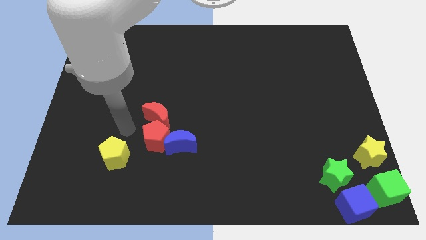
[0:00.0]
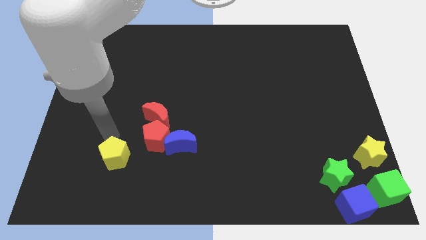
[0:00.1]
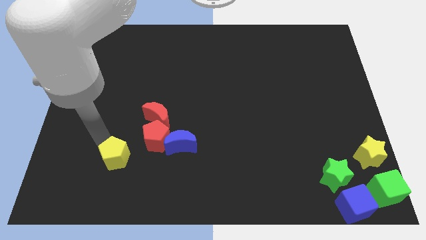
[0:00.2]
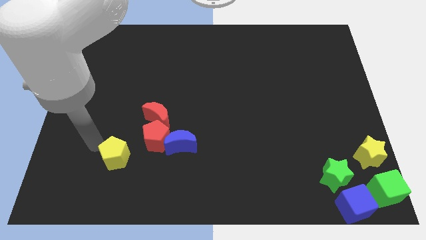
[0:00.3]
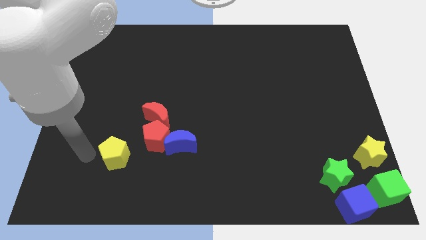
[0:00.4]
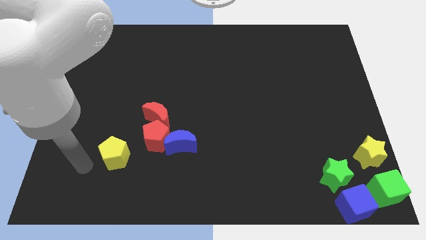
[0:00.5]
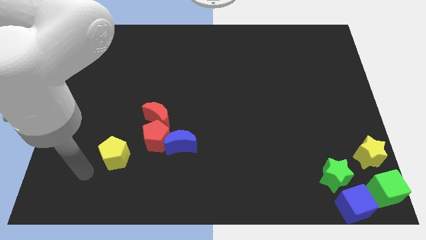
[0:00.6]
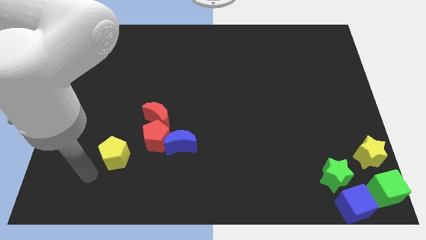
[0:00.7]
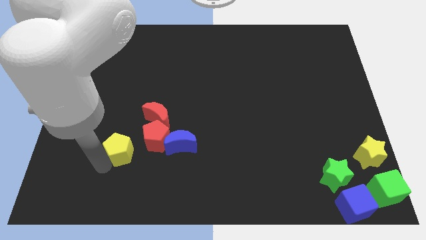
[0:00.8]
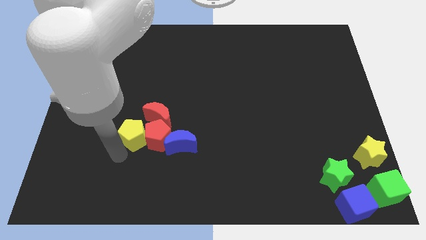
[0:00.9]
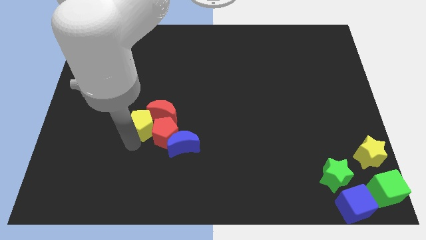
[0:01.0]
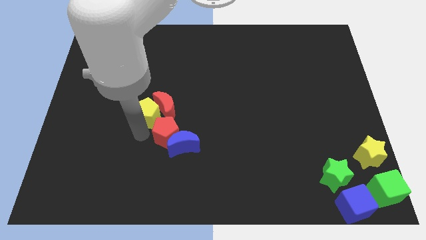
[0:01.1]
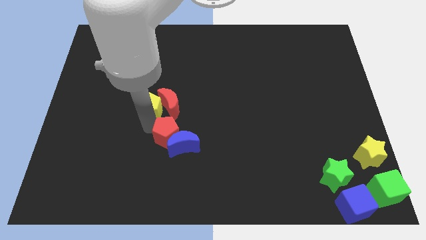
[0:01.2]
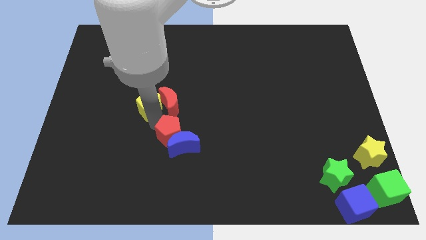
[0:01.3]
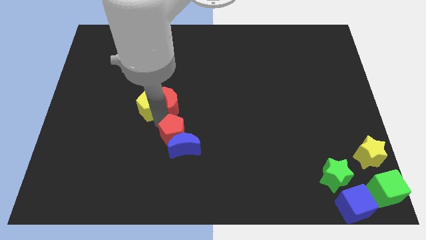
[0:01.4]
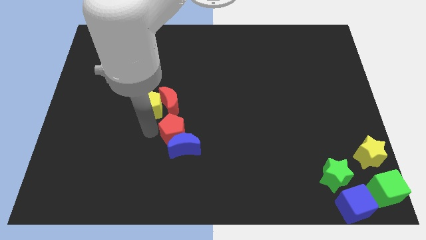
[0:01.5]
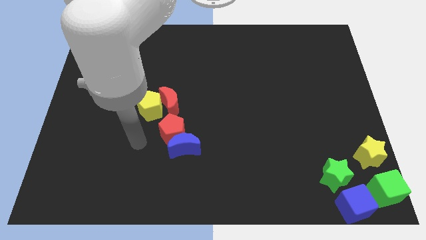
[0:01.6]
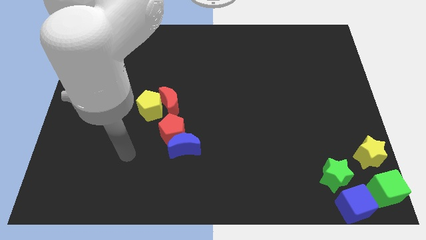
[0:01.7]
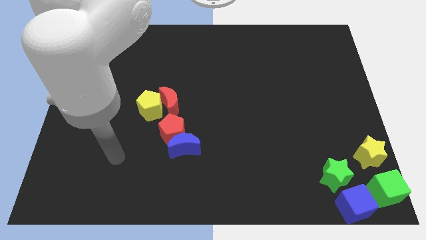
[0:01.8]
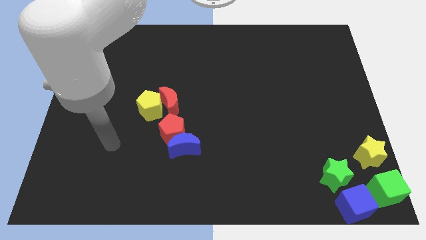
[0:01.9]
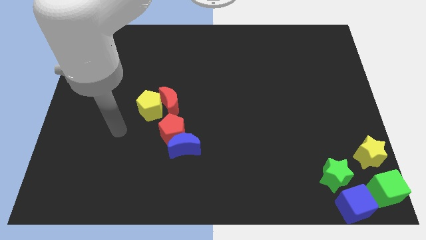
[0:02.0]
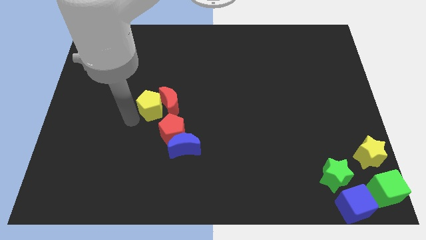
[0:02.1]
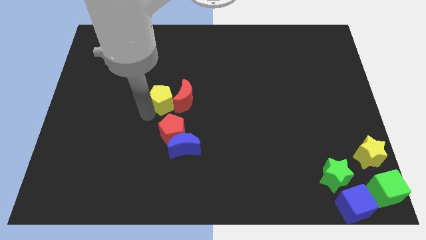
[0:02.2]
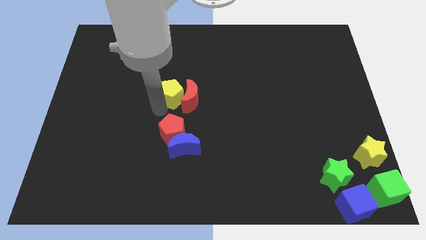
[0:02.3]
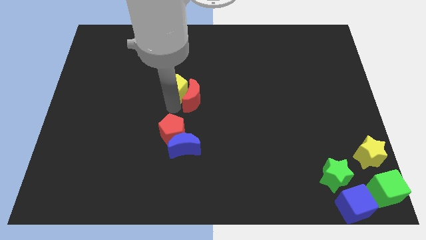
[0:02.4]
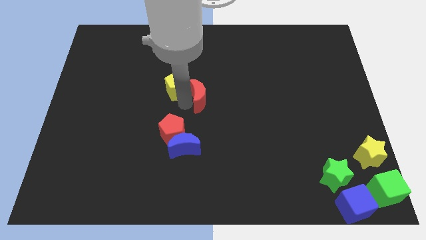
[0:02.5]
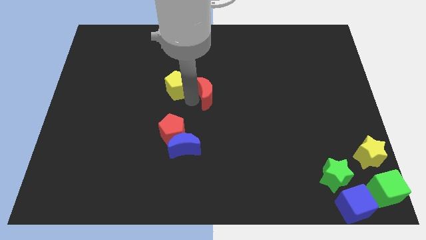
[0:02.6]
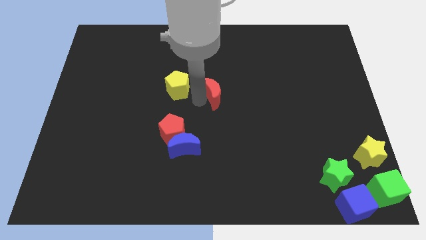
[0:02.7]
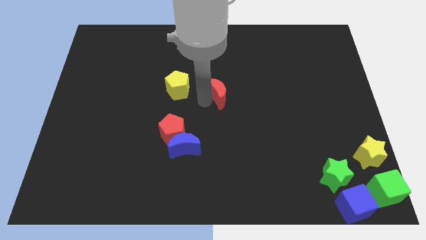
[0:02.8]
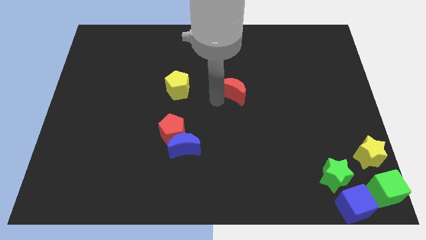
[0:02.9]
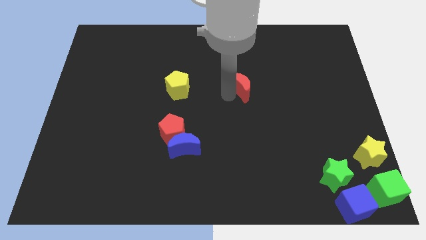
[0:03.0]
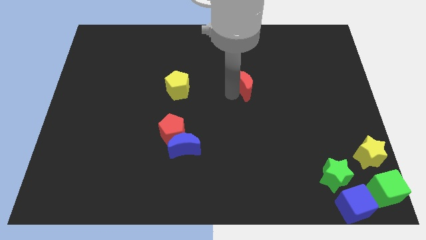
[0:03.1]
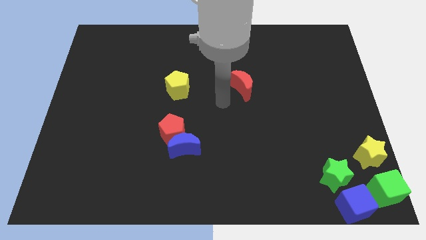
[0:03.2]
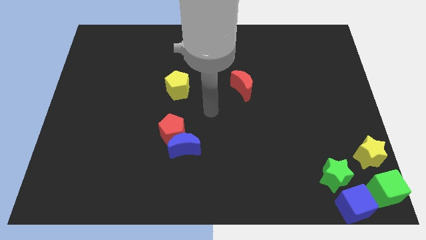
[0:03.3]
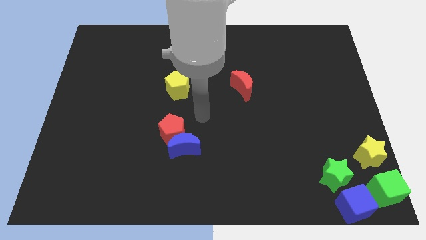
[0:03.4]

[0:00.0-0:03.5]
separate the red moon from the yellow pentagon

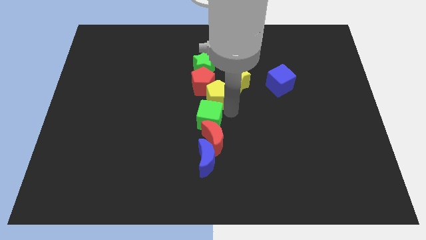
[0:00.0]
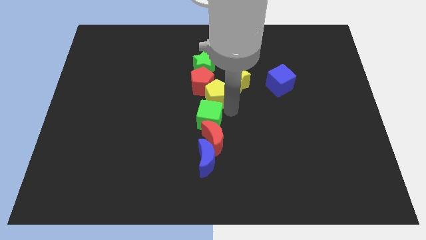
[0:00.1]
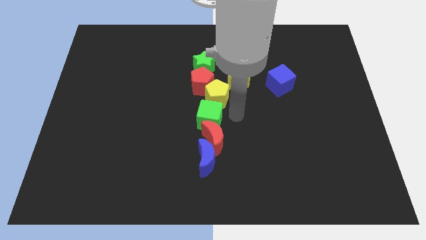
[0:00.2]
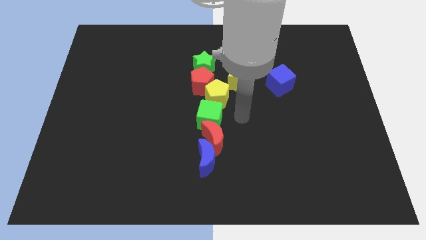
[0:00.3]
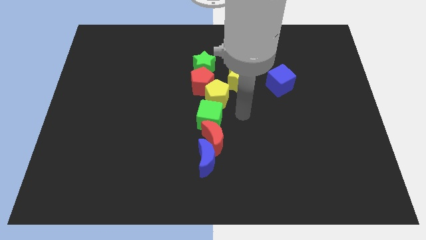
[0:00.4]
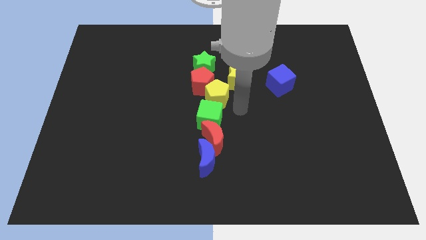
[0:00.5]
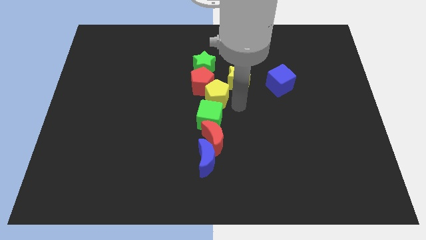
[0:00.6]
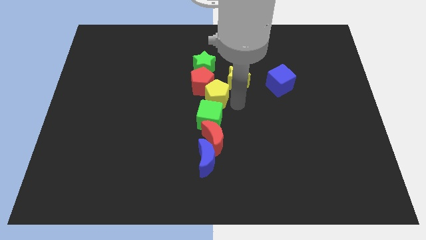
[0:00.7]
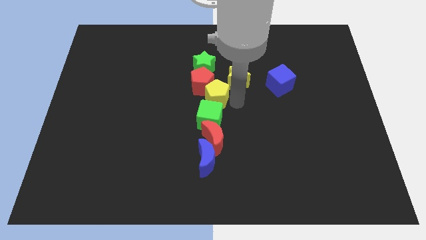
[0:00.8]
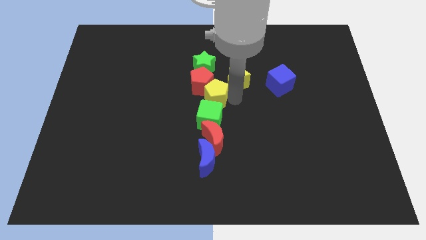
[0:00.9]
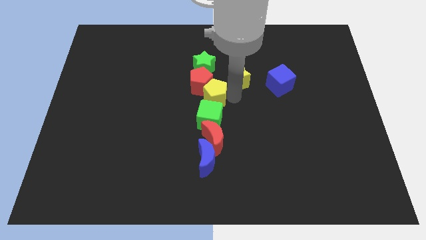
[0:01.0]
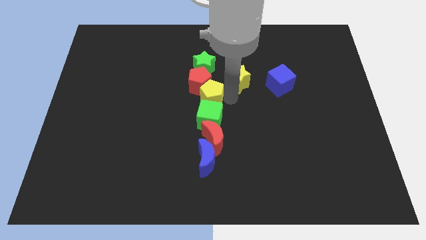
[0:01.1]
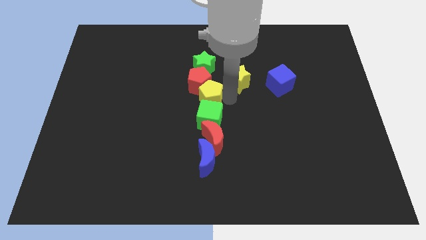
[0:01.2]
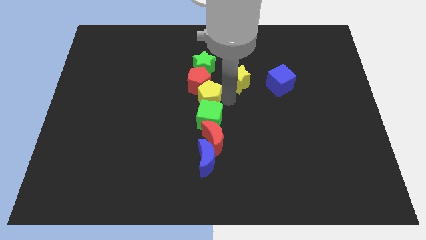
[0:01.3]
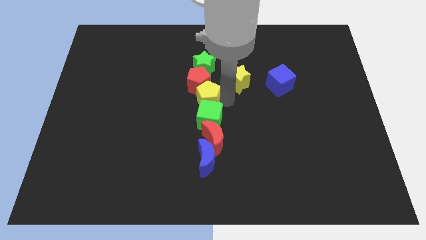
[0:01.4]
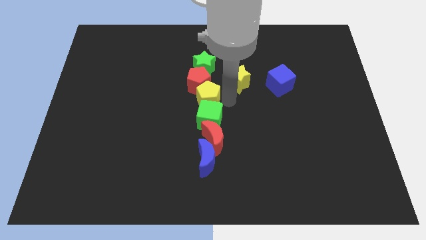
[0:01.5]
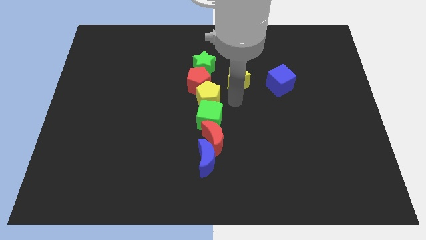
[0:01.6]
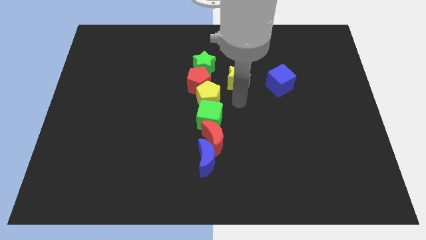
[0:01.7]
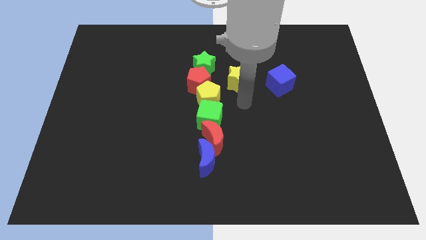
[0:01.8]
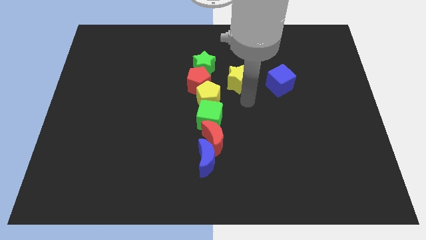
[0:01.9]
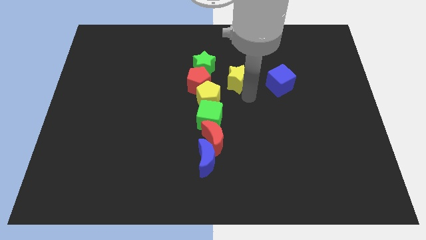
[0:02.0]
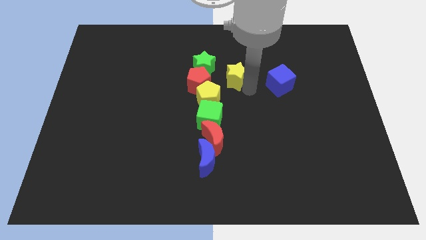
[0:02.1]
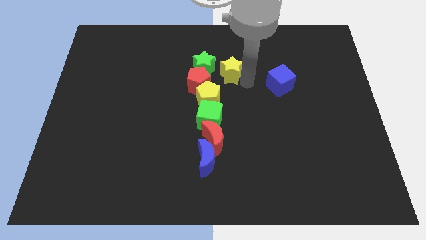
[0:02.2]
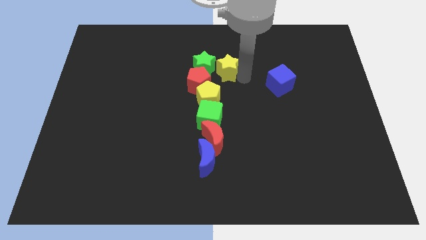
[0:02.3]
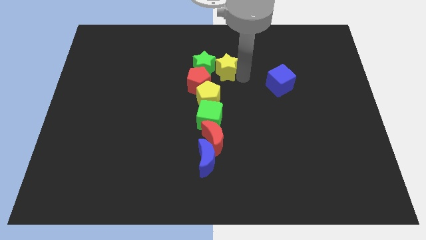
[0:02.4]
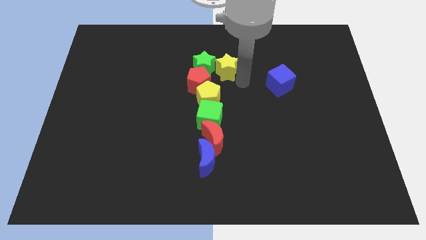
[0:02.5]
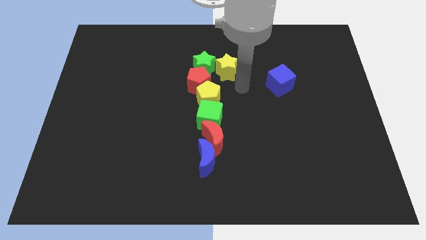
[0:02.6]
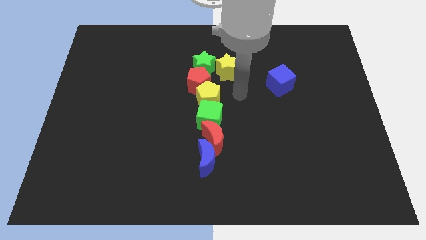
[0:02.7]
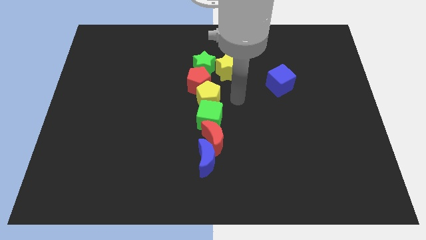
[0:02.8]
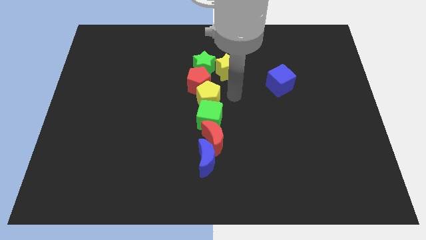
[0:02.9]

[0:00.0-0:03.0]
adjust the yellow pentagon to the left

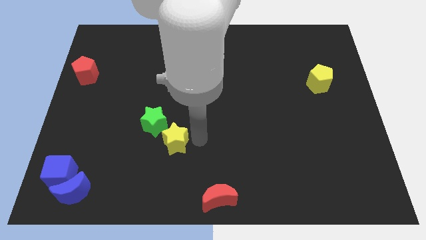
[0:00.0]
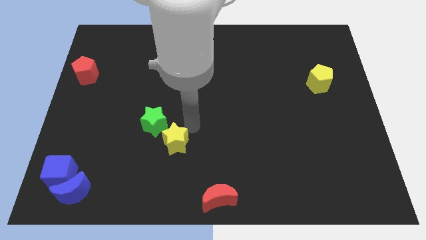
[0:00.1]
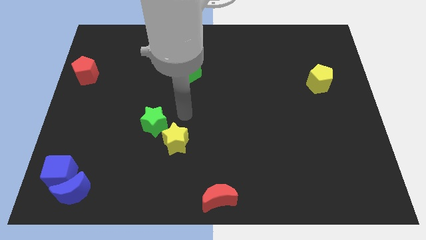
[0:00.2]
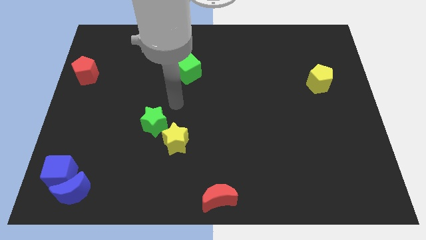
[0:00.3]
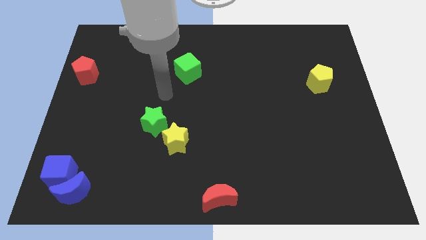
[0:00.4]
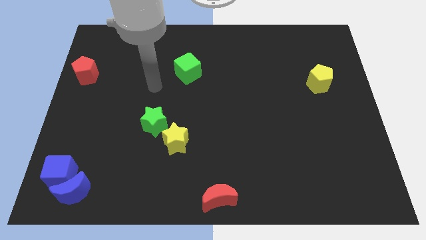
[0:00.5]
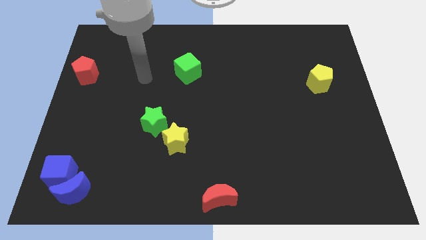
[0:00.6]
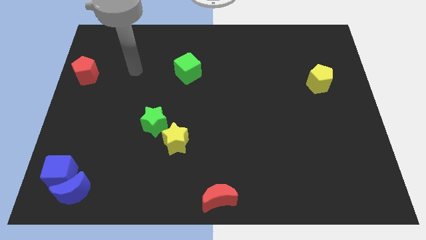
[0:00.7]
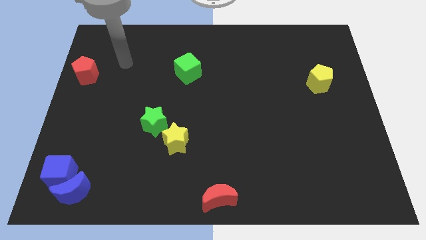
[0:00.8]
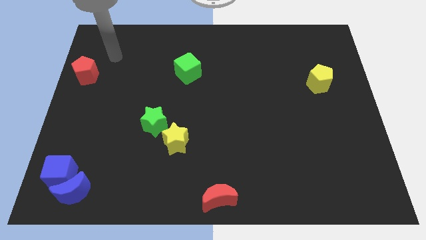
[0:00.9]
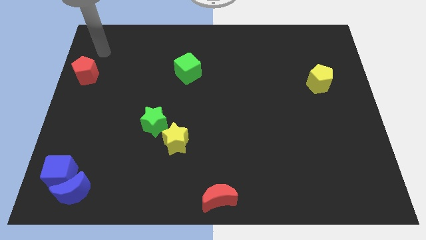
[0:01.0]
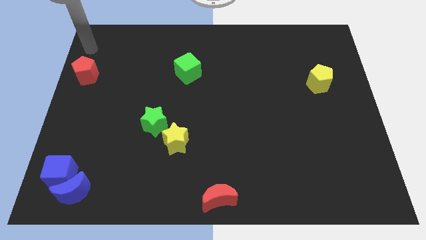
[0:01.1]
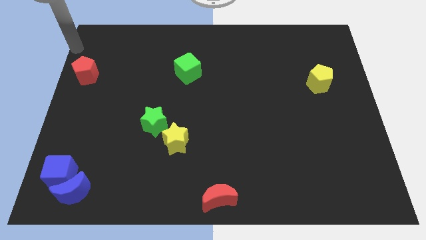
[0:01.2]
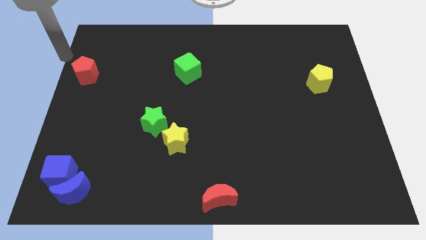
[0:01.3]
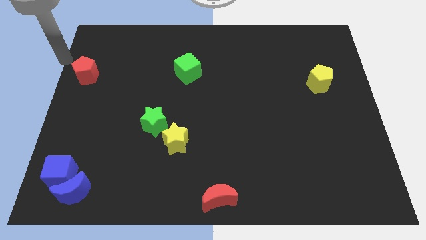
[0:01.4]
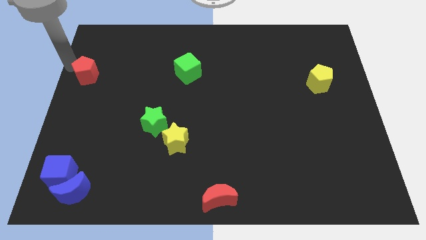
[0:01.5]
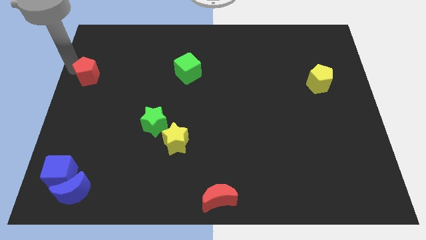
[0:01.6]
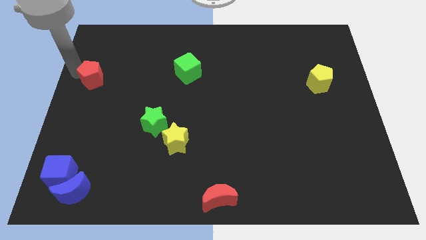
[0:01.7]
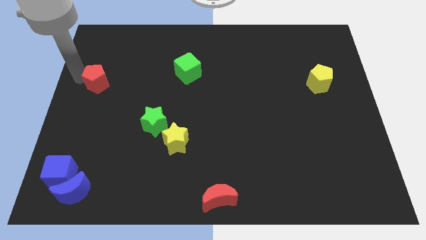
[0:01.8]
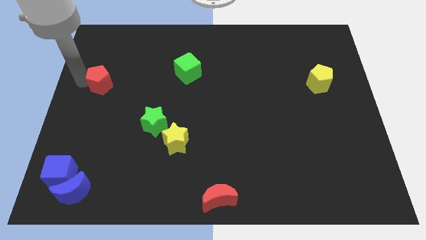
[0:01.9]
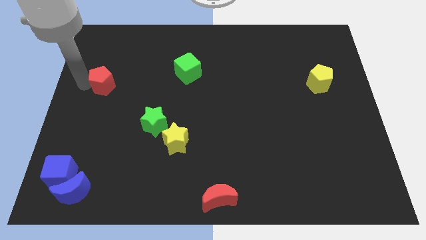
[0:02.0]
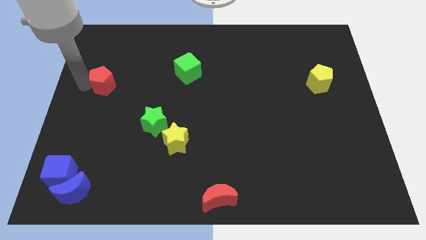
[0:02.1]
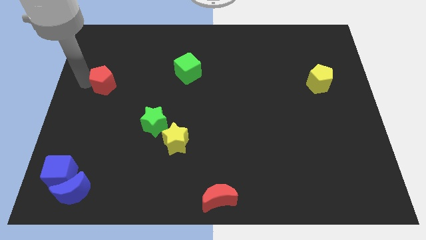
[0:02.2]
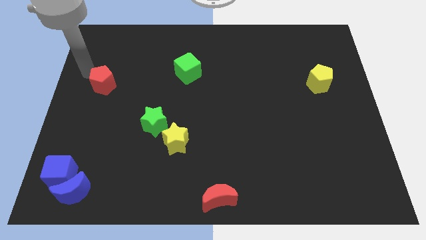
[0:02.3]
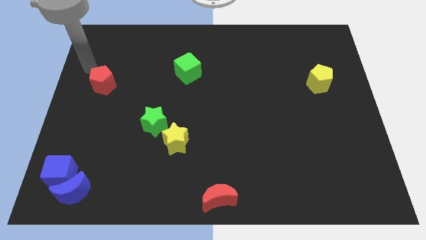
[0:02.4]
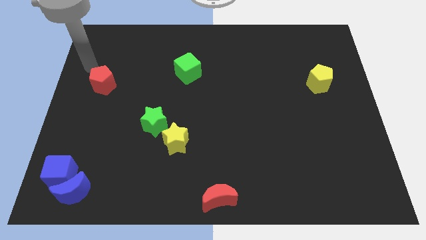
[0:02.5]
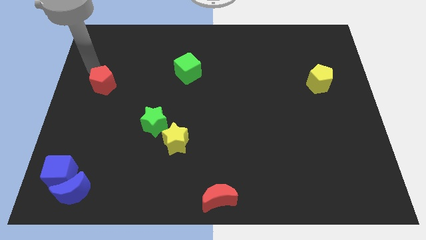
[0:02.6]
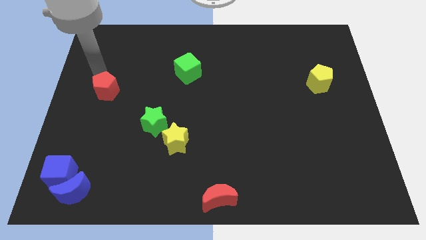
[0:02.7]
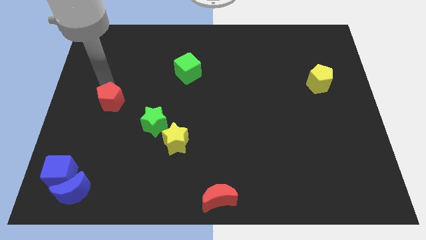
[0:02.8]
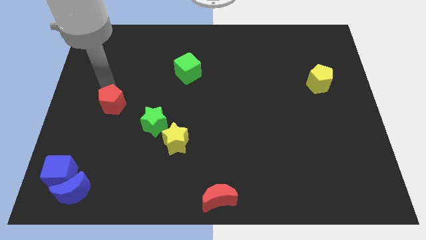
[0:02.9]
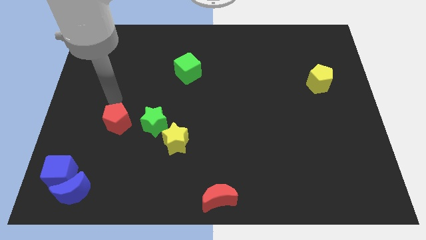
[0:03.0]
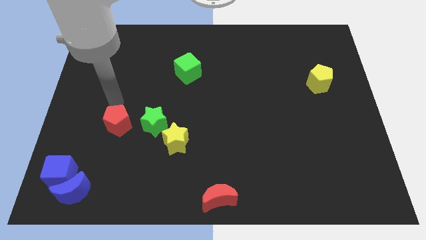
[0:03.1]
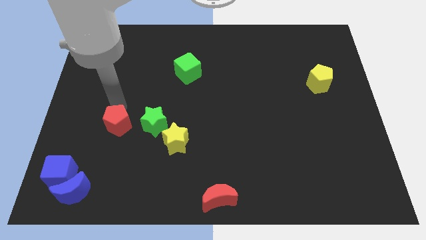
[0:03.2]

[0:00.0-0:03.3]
slide the red pentagon to the left of the green star
